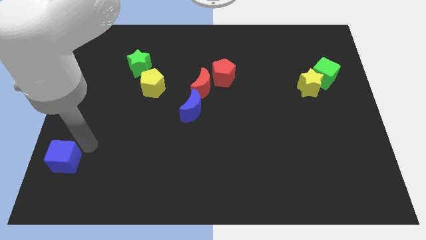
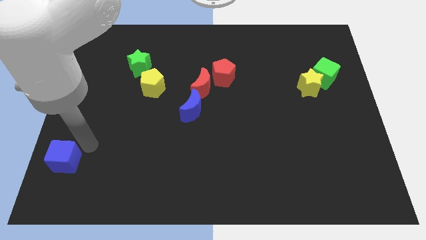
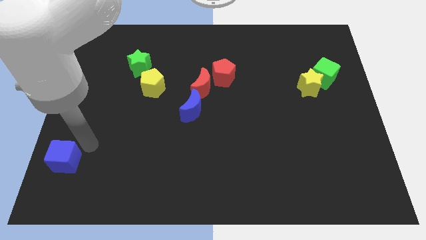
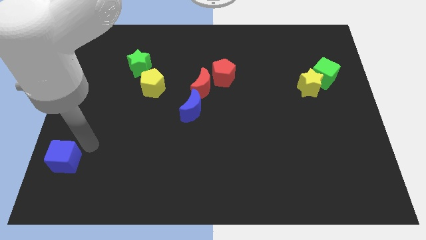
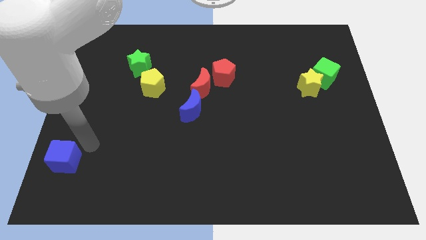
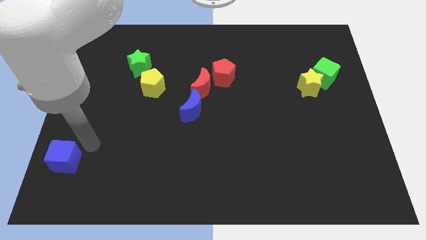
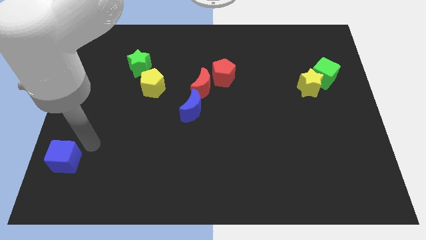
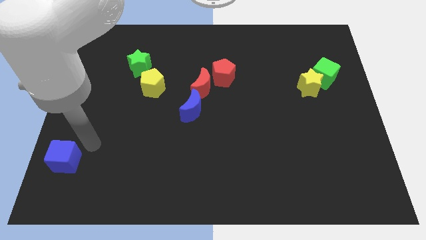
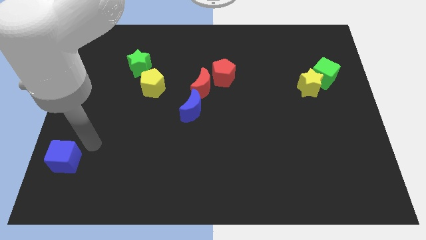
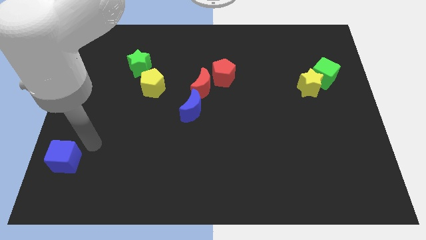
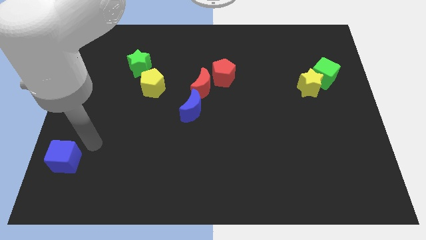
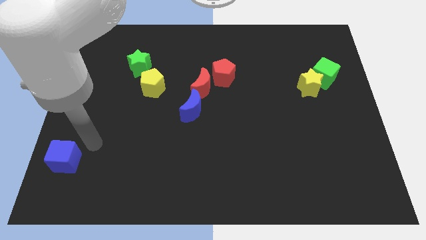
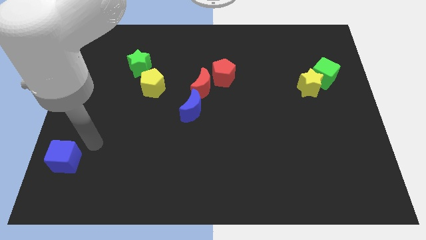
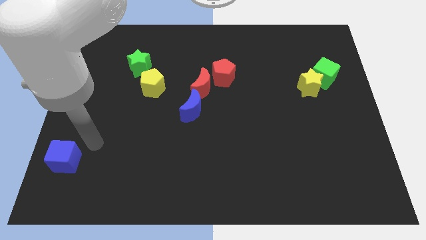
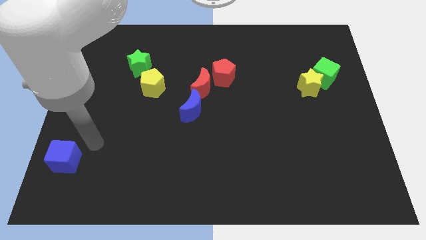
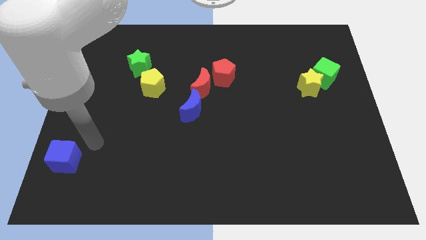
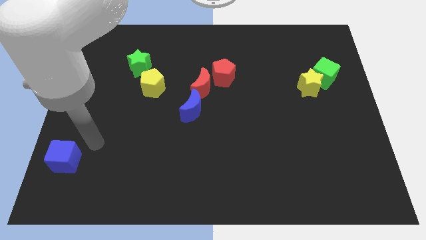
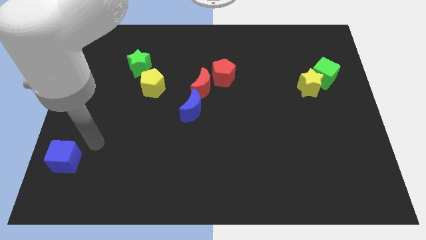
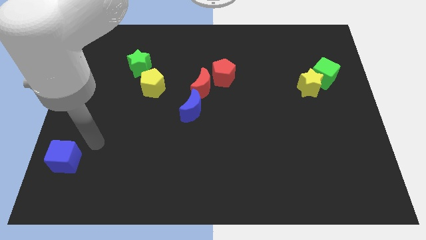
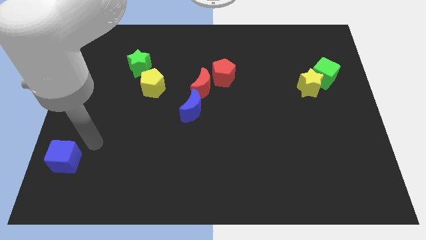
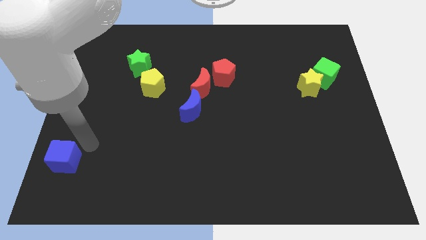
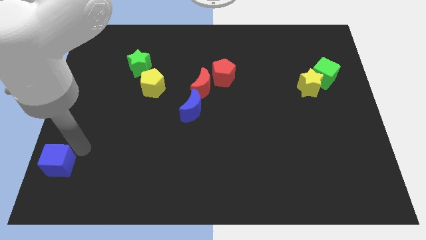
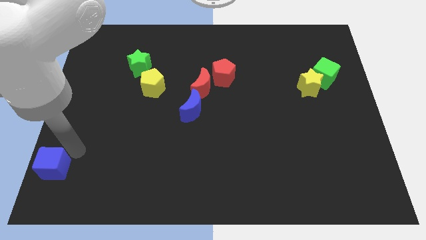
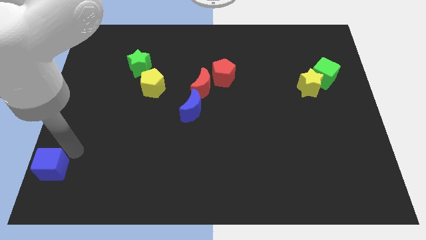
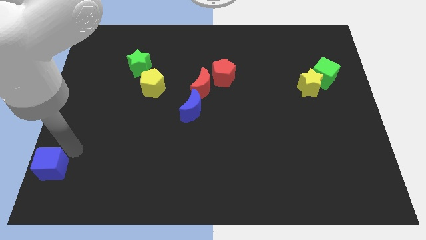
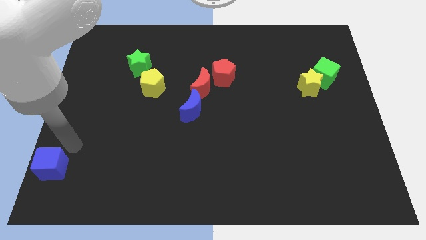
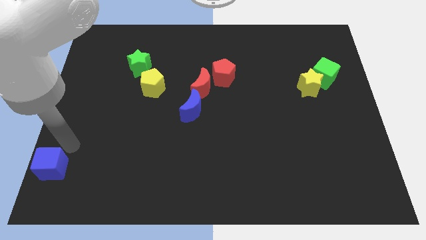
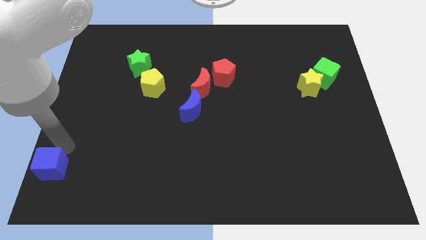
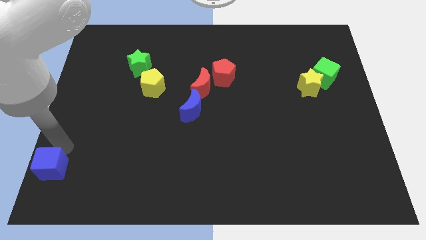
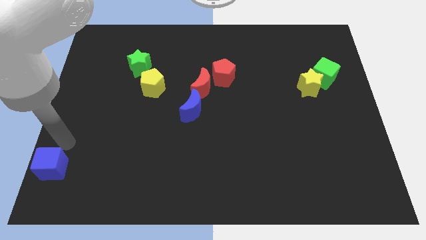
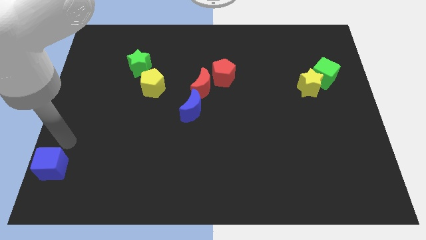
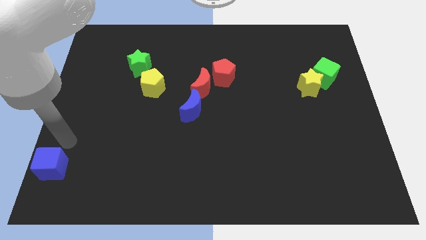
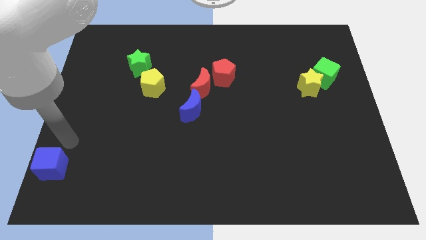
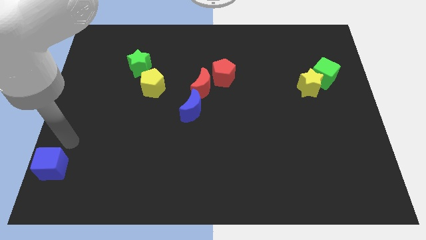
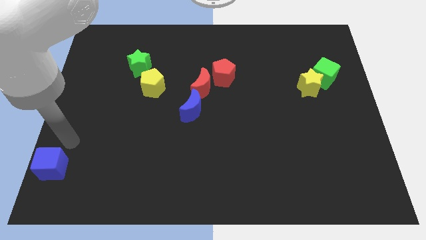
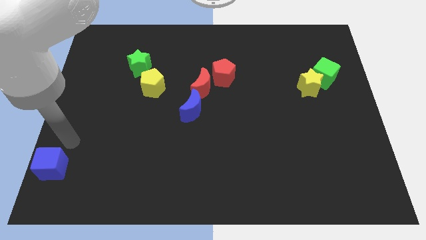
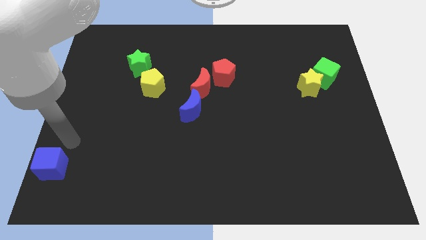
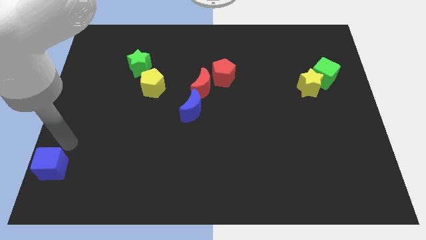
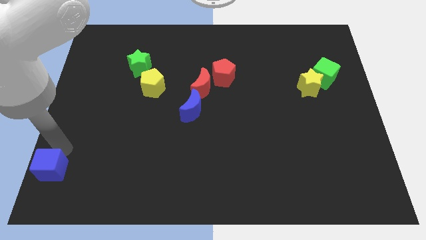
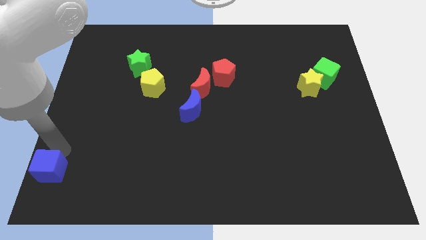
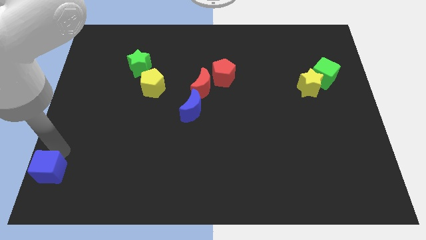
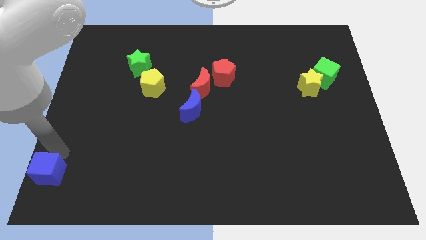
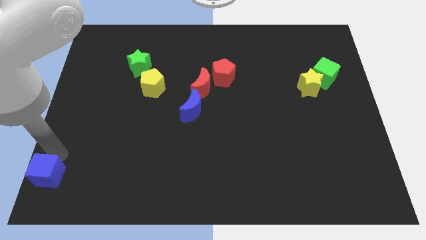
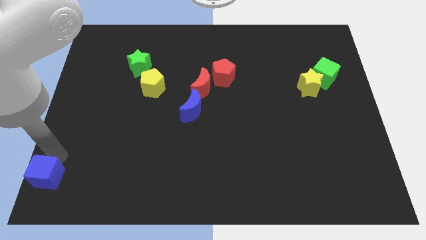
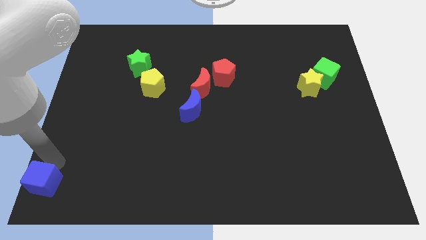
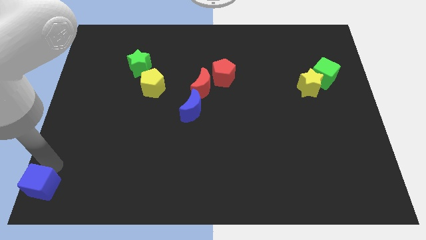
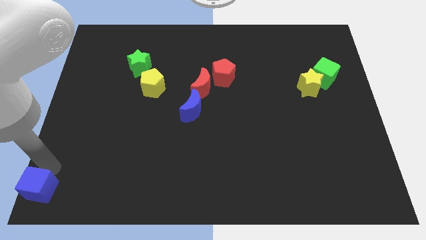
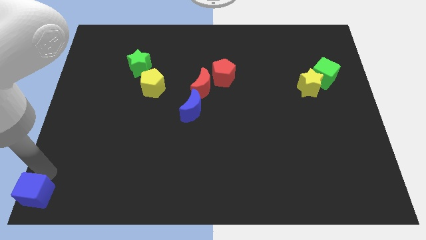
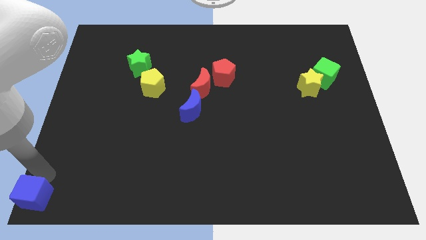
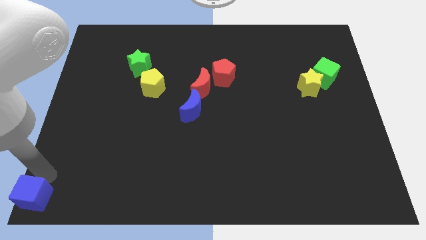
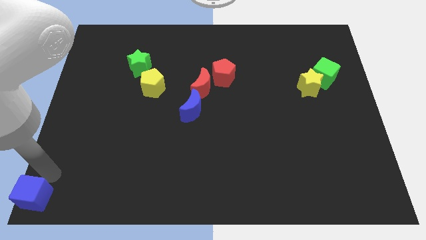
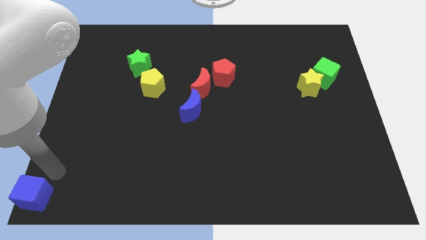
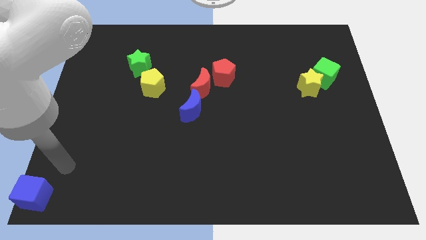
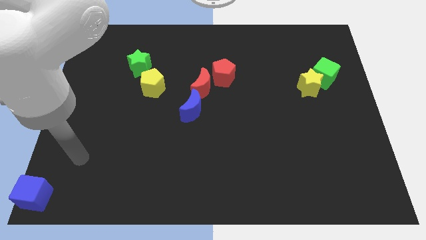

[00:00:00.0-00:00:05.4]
place the blue cube at the bottom left corner of the board

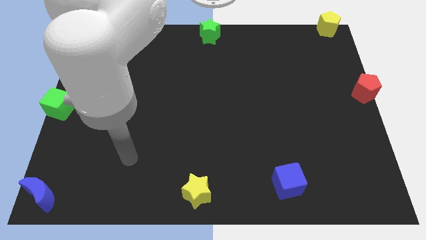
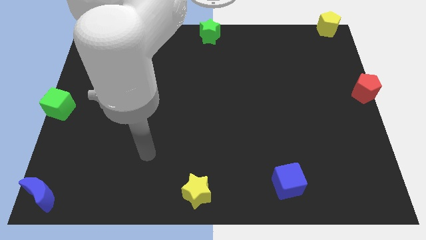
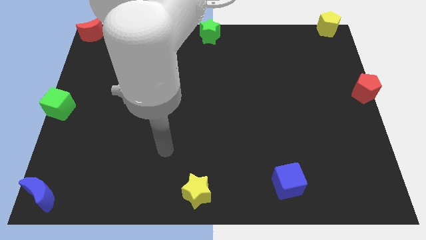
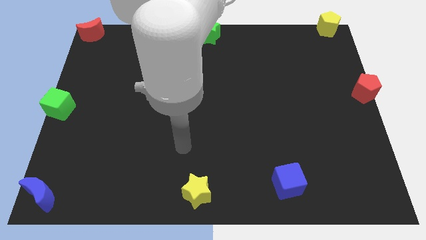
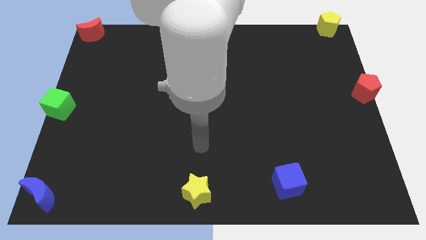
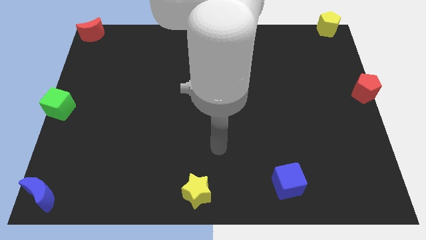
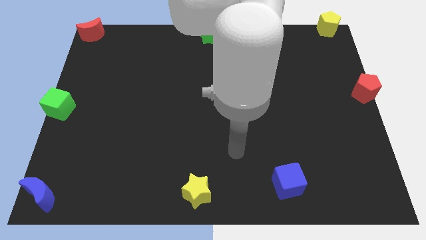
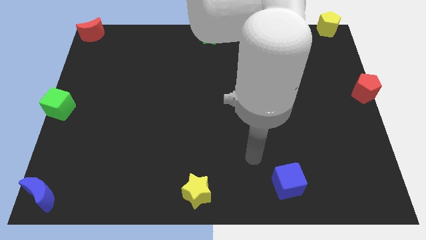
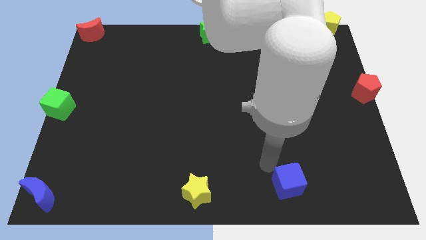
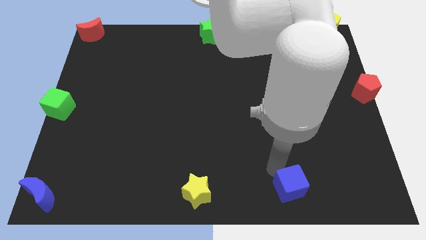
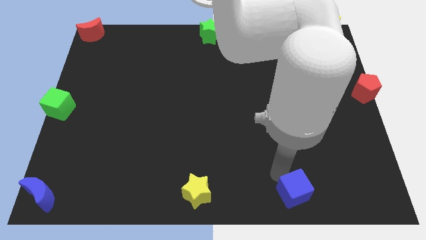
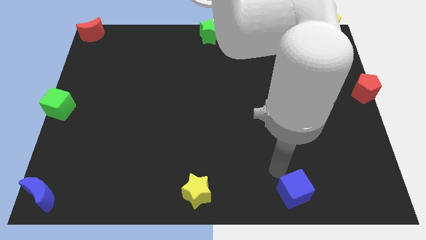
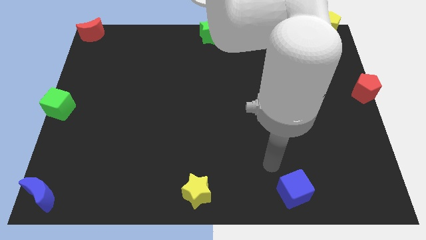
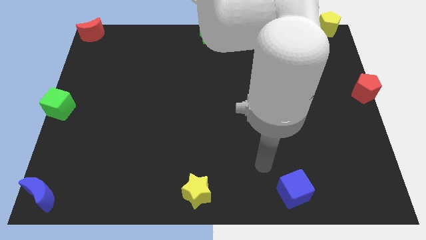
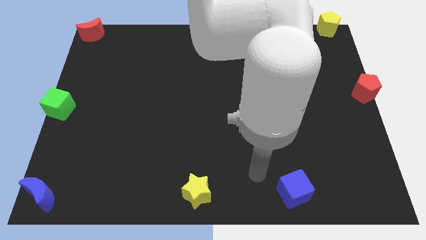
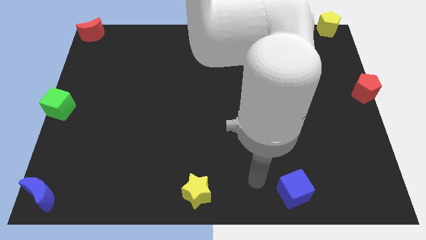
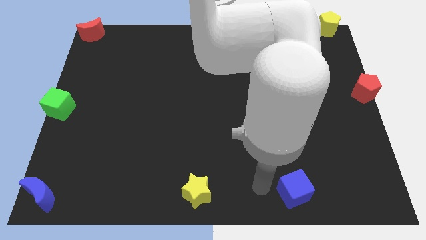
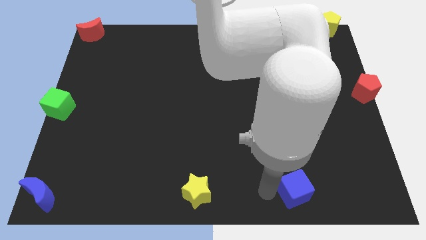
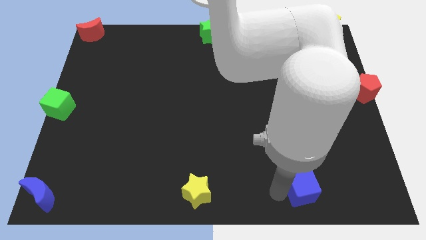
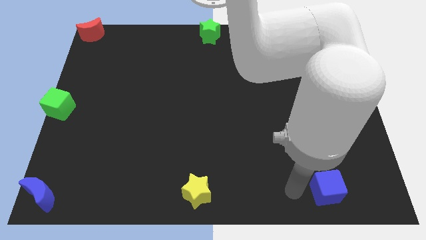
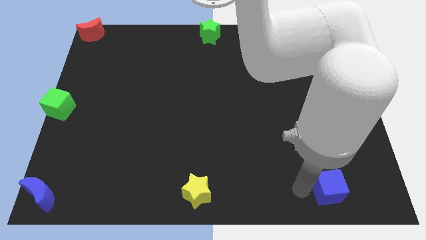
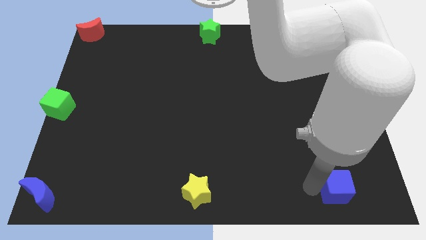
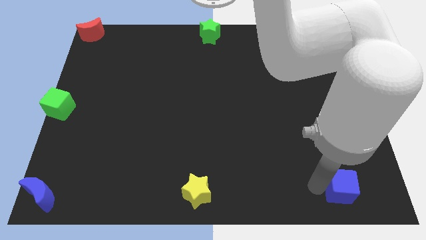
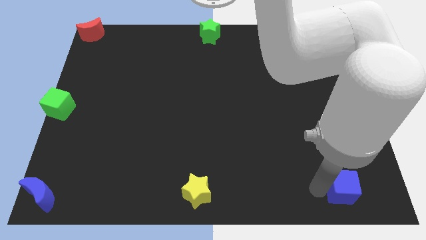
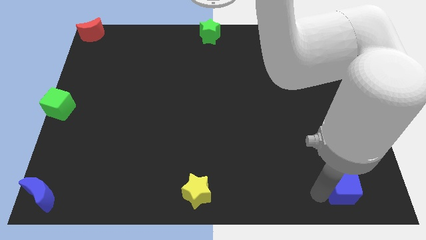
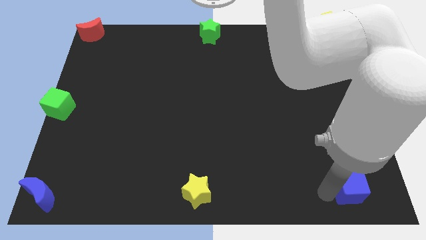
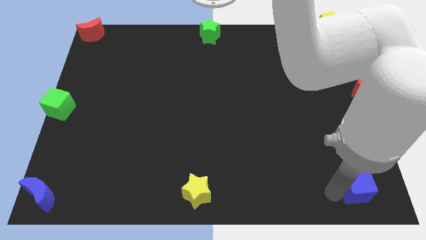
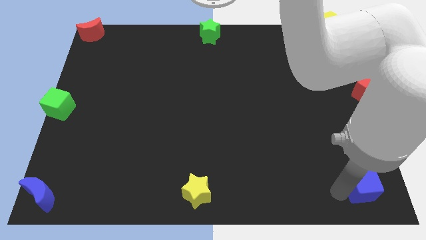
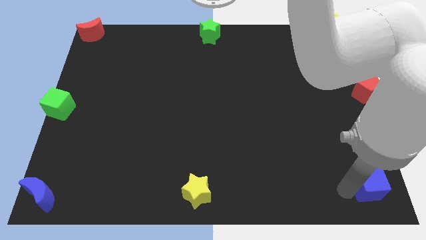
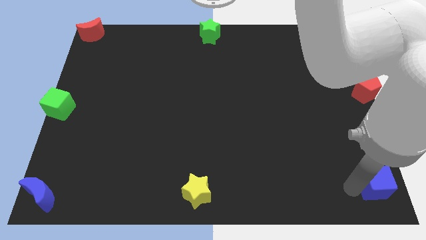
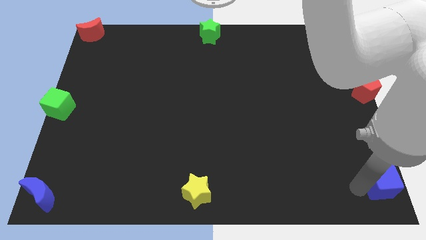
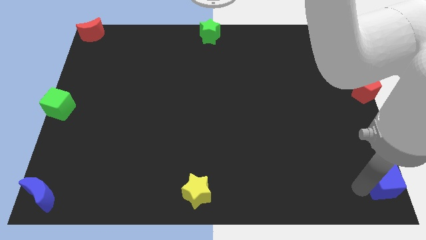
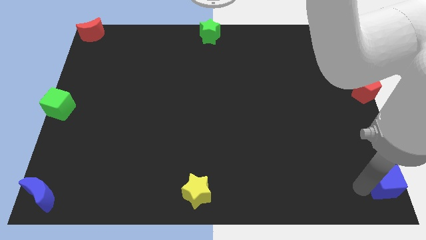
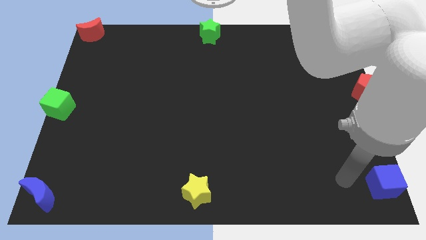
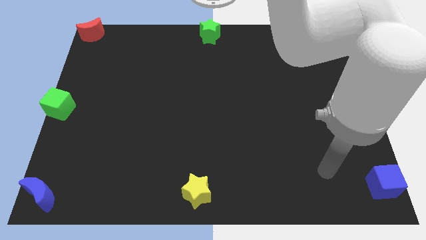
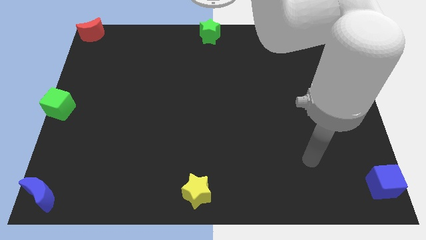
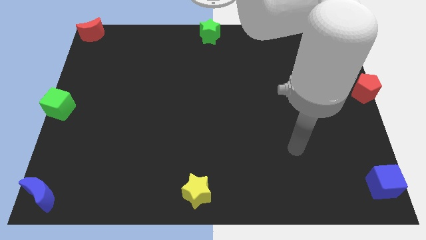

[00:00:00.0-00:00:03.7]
move the blue cube to the bottom right corner of the board
